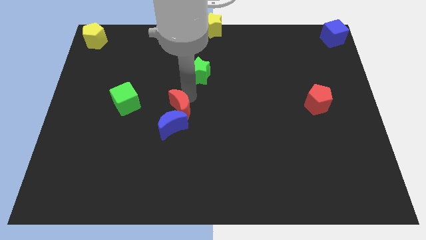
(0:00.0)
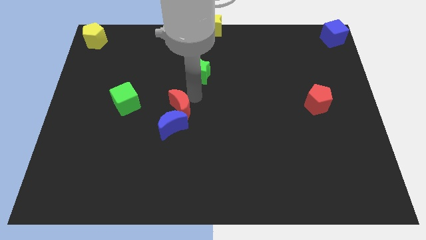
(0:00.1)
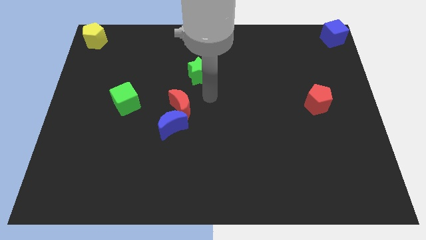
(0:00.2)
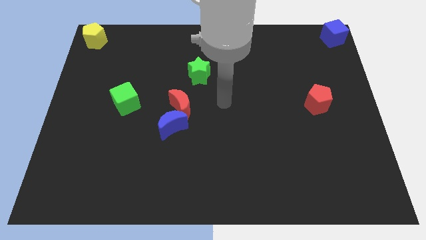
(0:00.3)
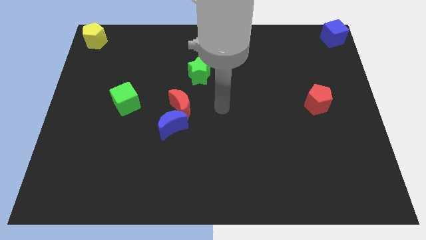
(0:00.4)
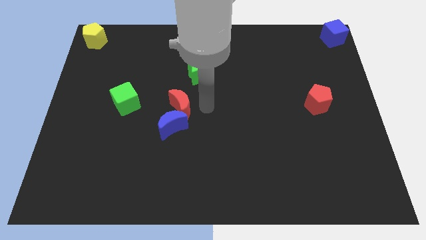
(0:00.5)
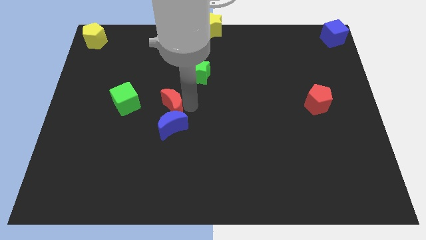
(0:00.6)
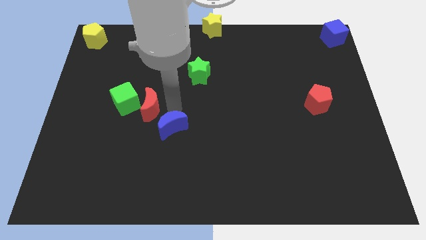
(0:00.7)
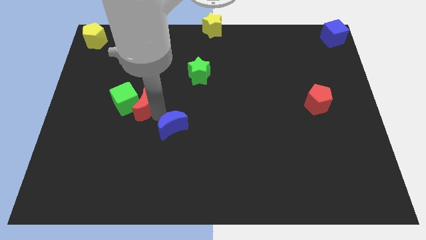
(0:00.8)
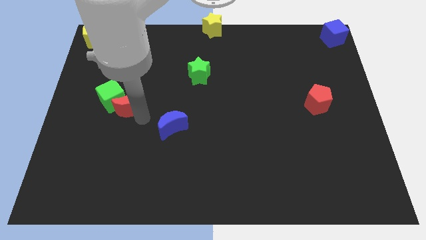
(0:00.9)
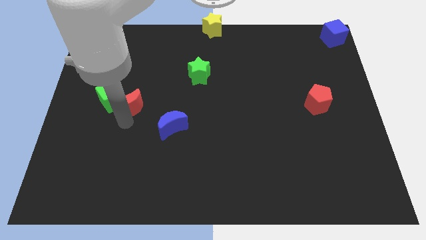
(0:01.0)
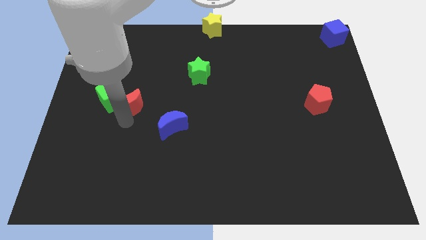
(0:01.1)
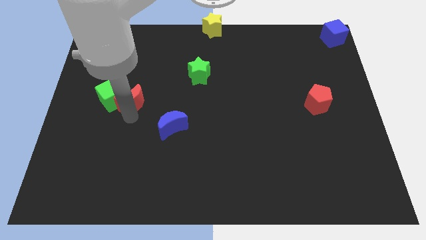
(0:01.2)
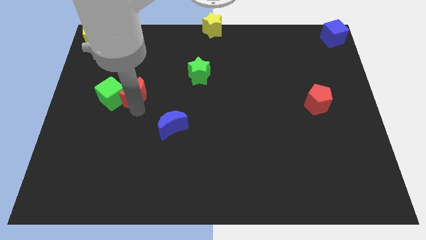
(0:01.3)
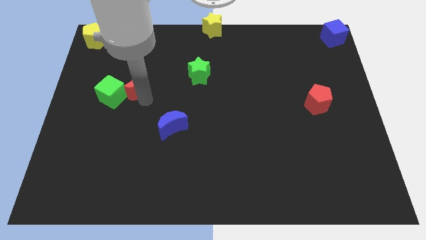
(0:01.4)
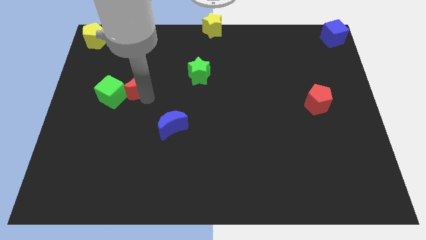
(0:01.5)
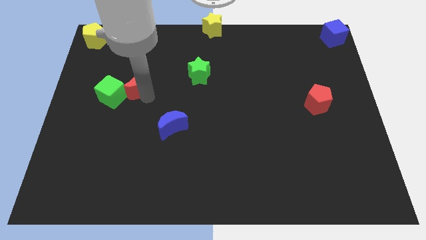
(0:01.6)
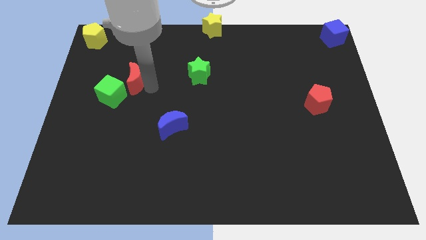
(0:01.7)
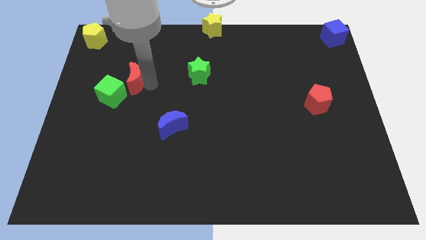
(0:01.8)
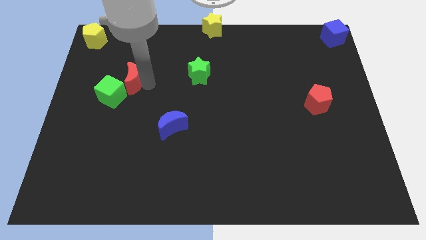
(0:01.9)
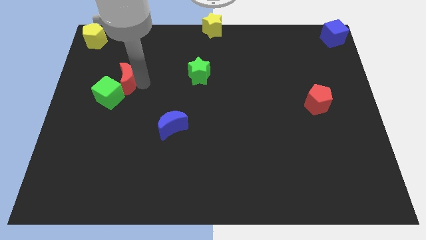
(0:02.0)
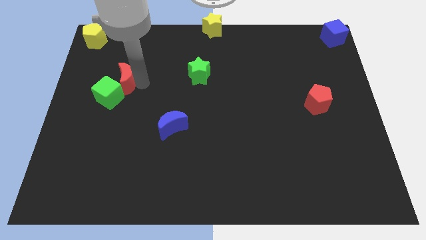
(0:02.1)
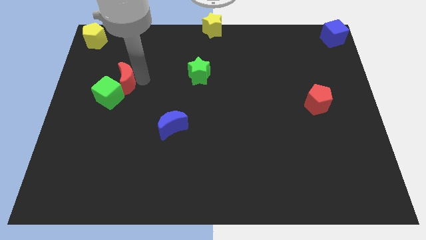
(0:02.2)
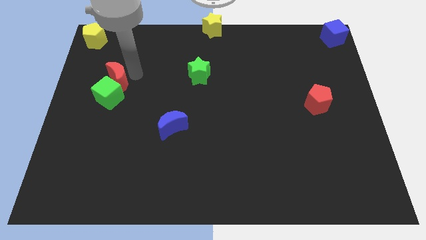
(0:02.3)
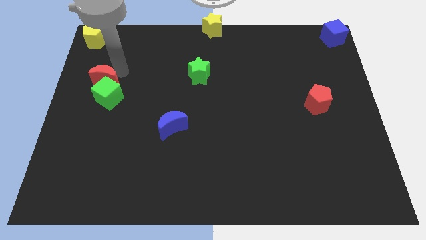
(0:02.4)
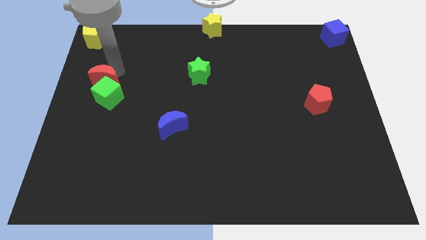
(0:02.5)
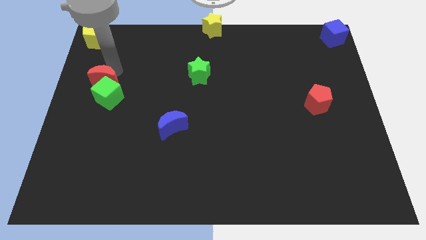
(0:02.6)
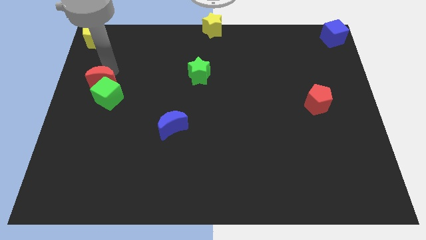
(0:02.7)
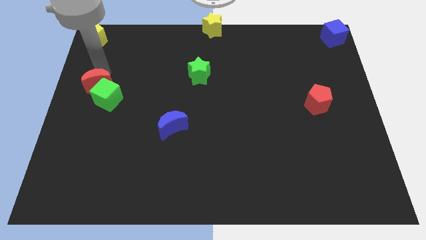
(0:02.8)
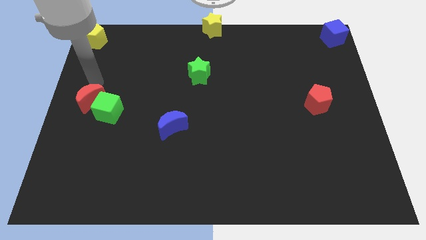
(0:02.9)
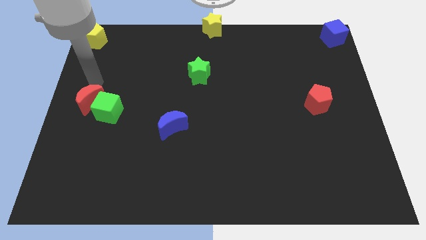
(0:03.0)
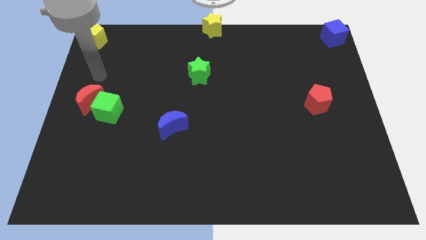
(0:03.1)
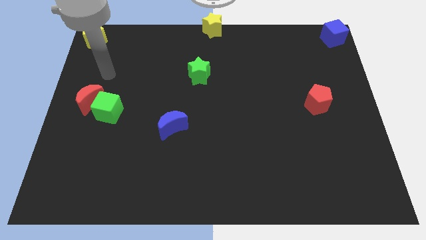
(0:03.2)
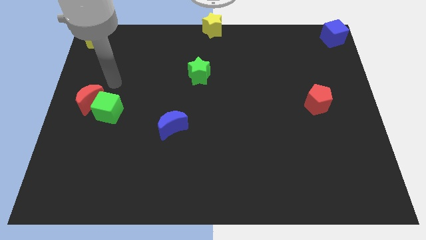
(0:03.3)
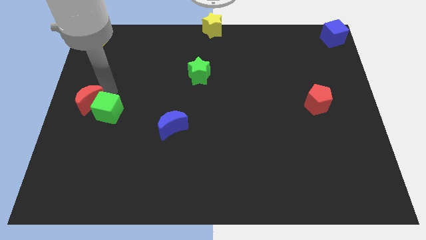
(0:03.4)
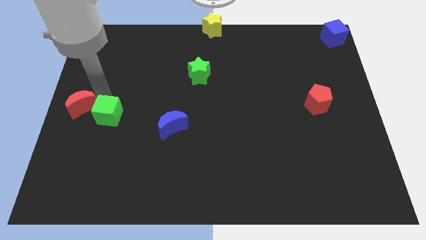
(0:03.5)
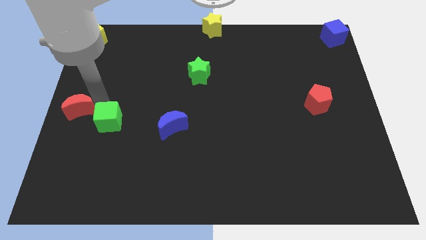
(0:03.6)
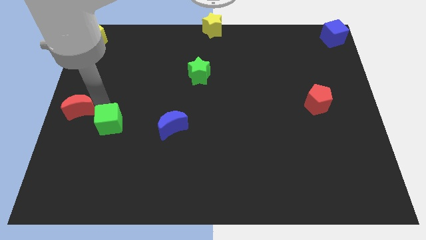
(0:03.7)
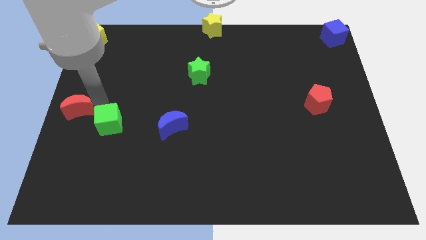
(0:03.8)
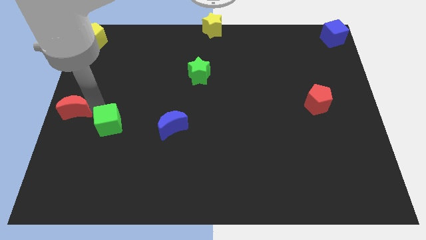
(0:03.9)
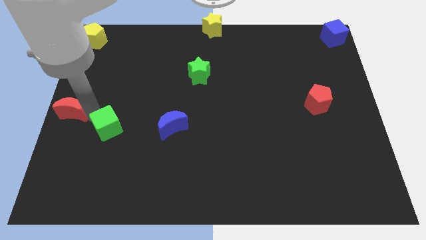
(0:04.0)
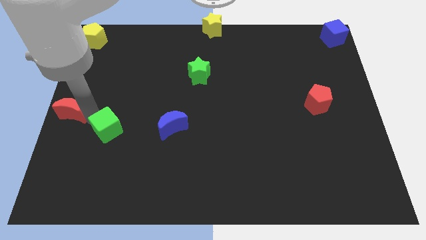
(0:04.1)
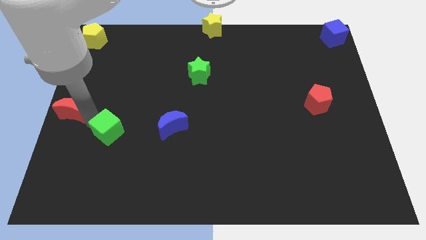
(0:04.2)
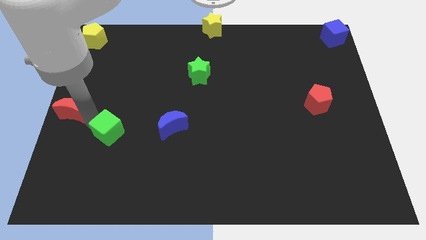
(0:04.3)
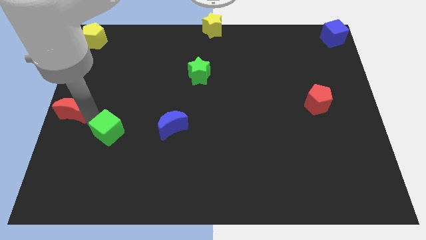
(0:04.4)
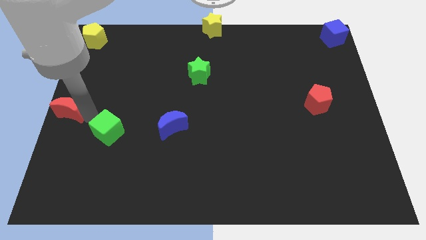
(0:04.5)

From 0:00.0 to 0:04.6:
push the red moon into the green cube

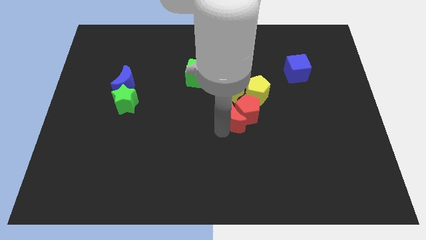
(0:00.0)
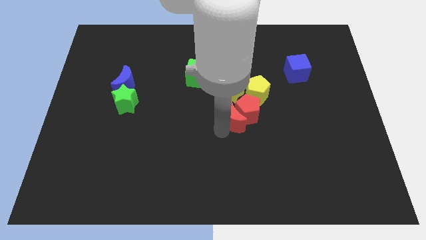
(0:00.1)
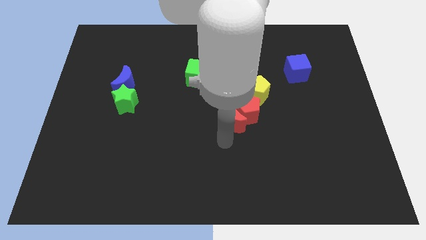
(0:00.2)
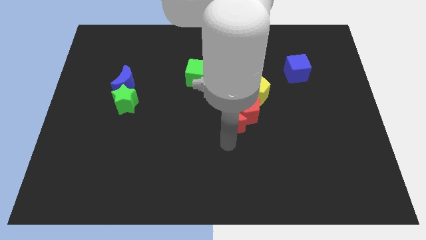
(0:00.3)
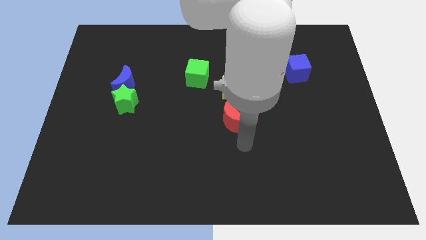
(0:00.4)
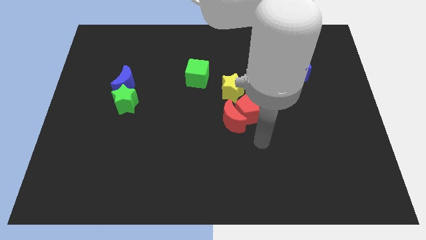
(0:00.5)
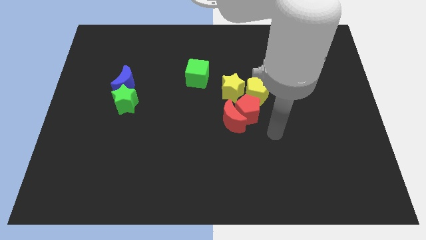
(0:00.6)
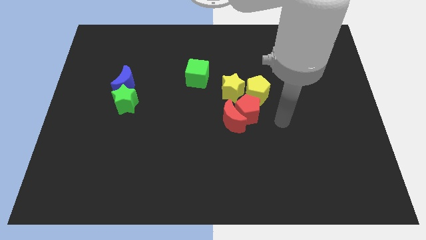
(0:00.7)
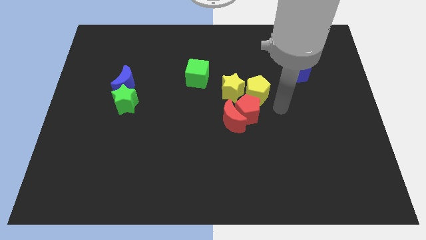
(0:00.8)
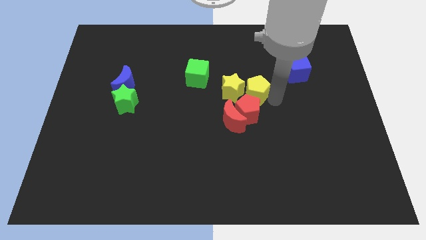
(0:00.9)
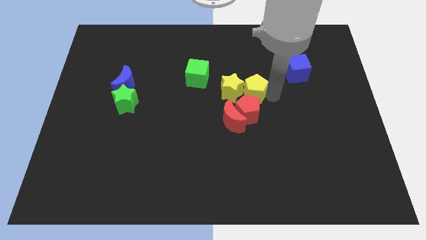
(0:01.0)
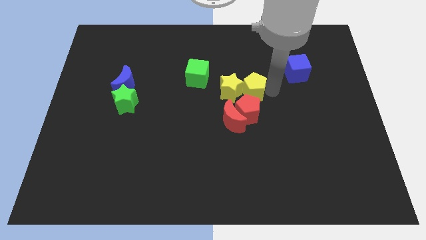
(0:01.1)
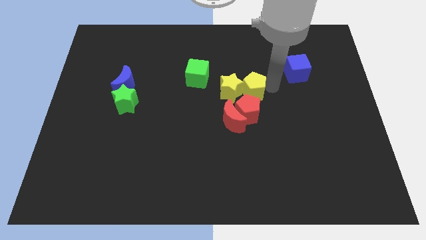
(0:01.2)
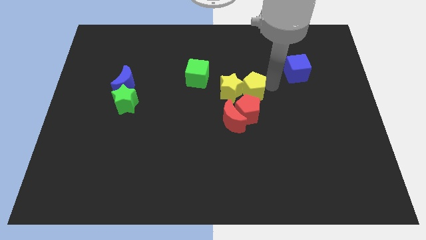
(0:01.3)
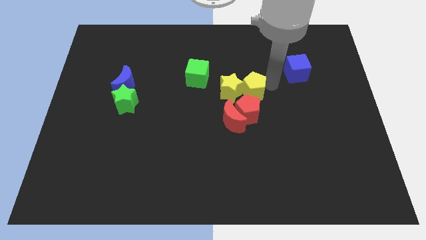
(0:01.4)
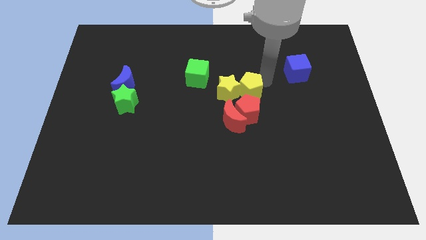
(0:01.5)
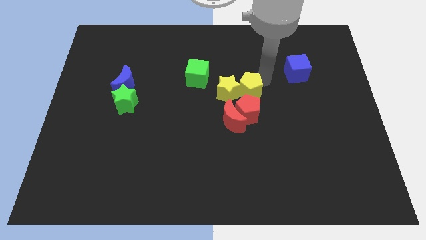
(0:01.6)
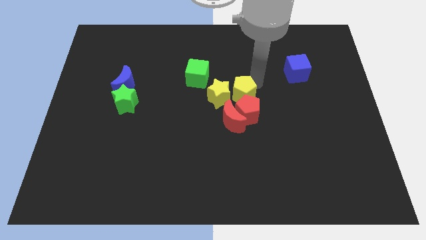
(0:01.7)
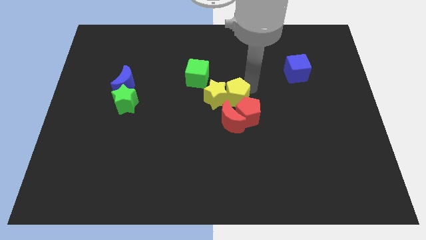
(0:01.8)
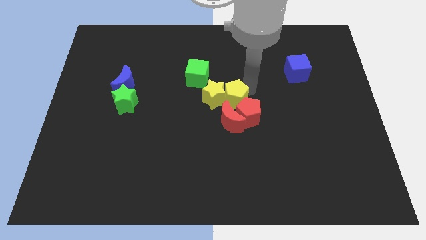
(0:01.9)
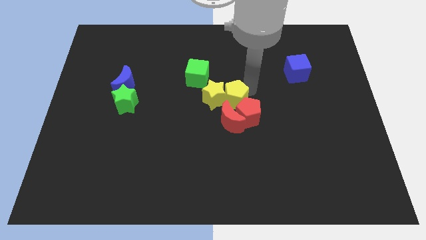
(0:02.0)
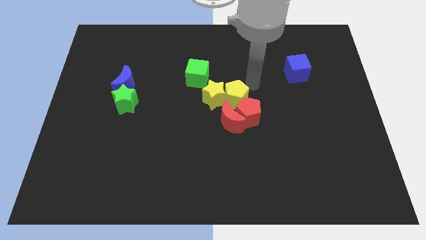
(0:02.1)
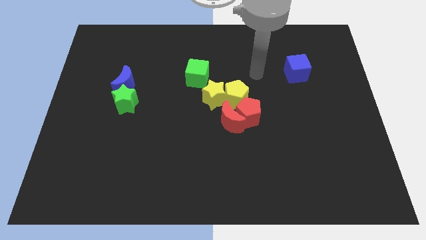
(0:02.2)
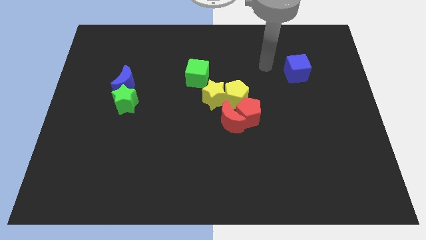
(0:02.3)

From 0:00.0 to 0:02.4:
push the yellow pentagon in to the right of the yellow star

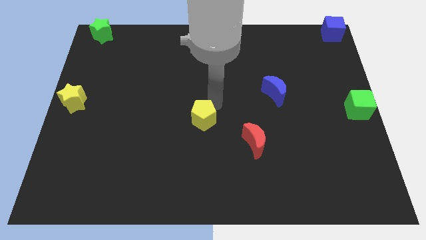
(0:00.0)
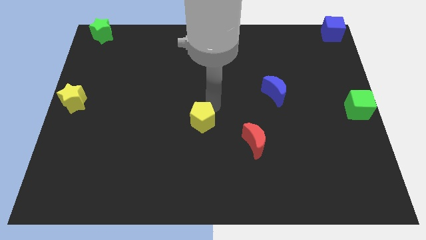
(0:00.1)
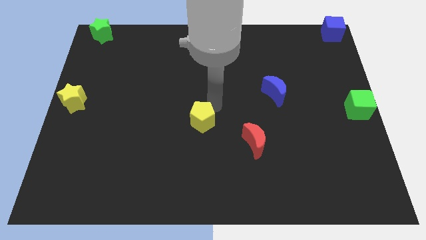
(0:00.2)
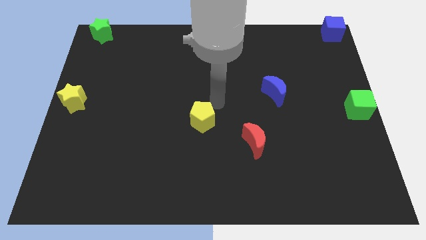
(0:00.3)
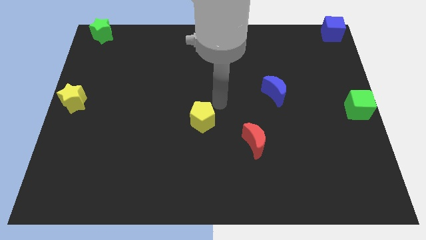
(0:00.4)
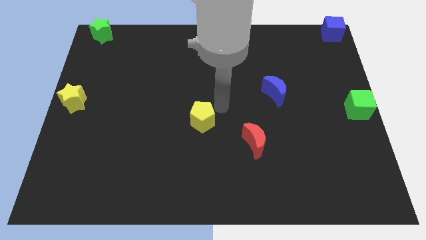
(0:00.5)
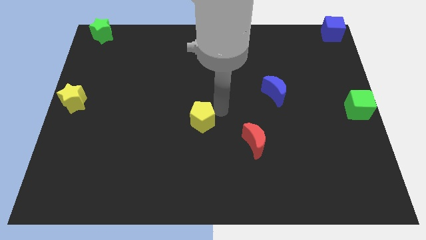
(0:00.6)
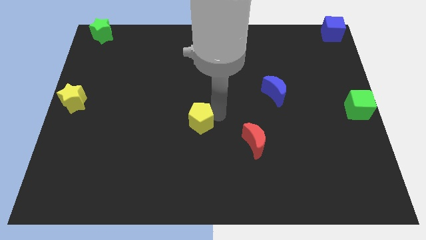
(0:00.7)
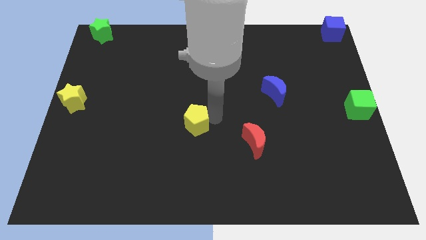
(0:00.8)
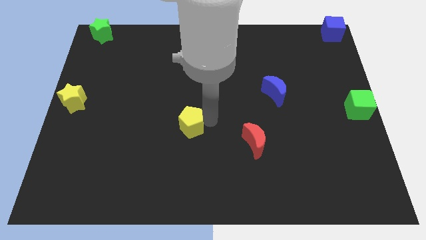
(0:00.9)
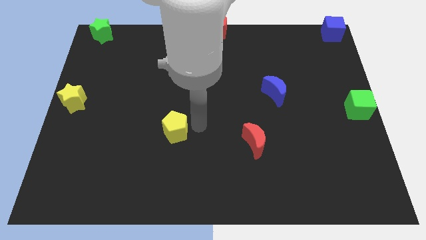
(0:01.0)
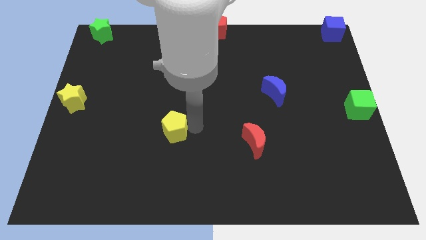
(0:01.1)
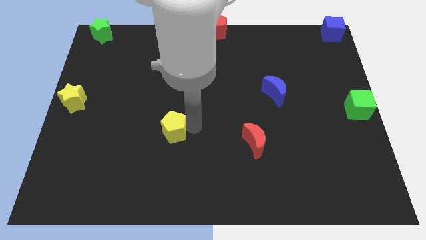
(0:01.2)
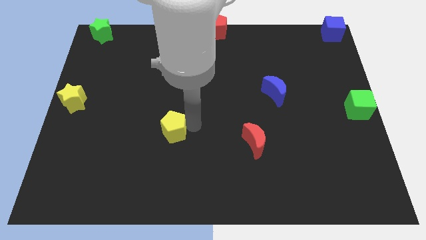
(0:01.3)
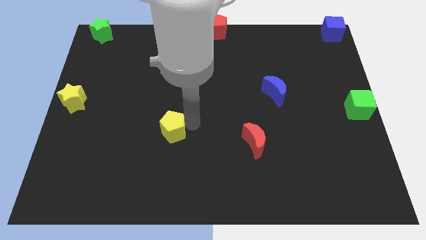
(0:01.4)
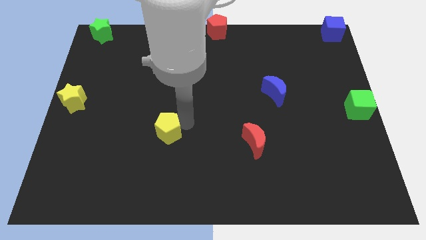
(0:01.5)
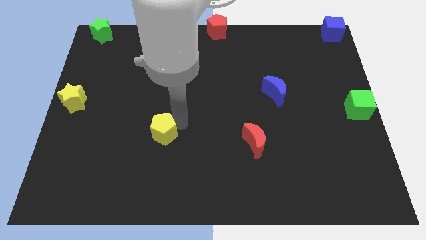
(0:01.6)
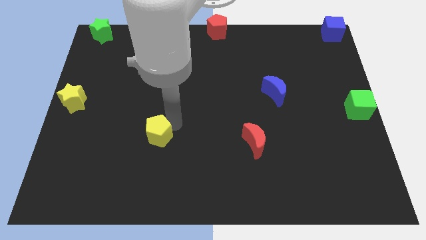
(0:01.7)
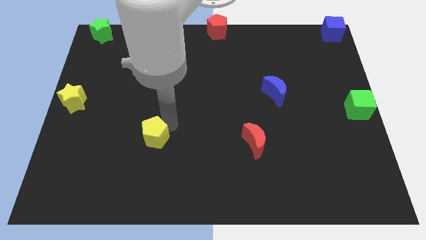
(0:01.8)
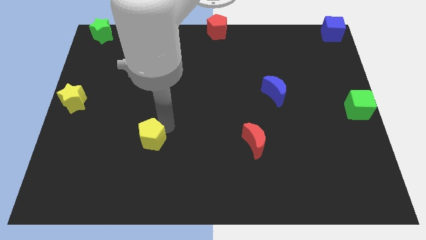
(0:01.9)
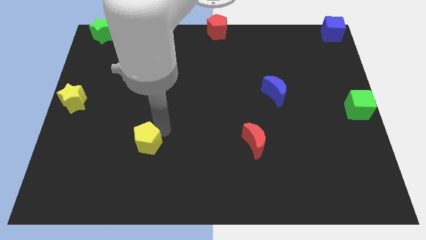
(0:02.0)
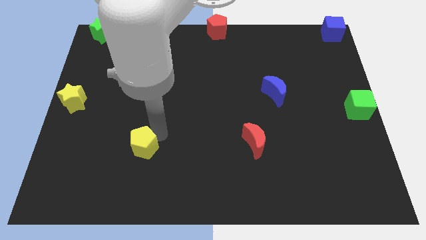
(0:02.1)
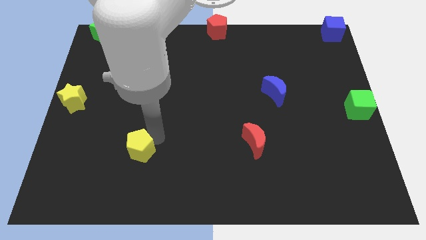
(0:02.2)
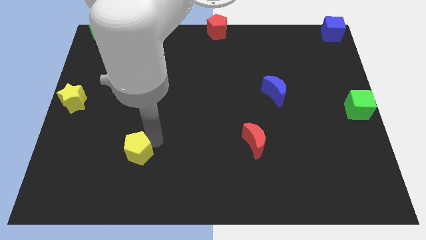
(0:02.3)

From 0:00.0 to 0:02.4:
place yellow pentagon parallel to red moon

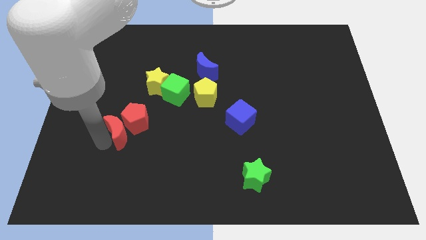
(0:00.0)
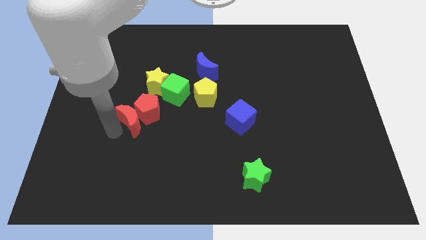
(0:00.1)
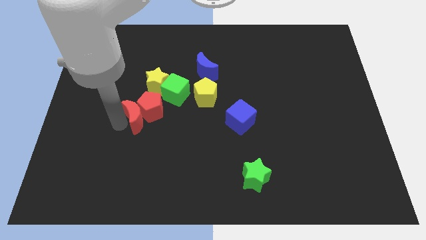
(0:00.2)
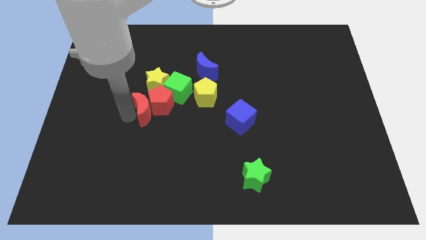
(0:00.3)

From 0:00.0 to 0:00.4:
push the red moon into the red pentagon
